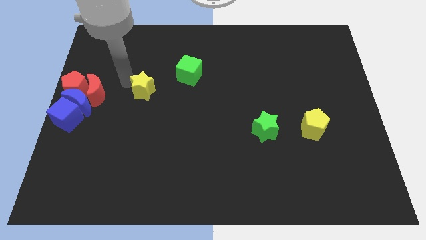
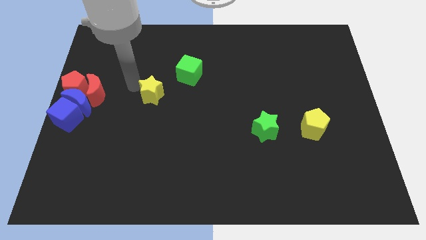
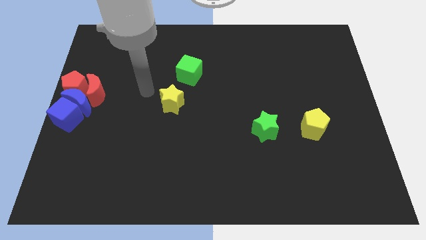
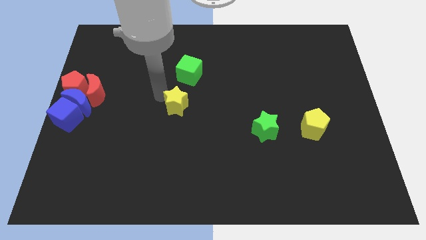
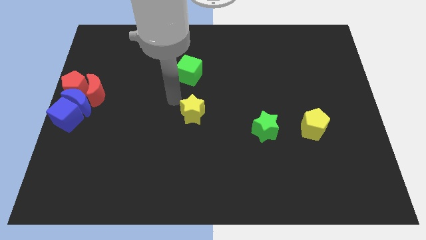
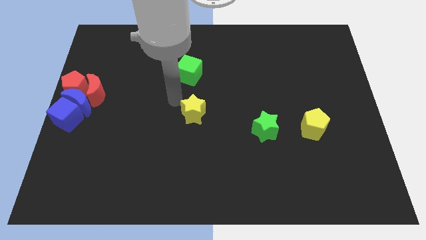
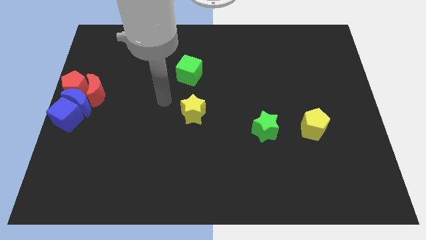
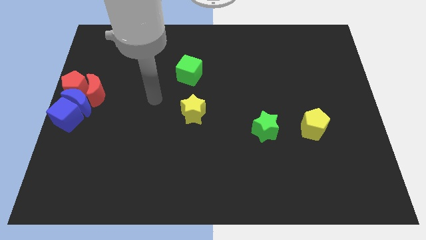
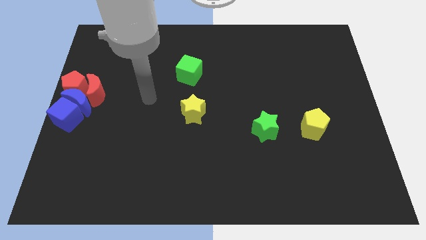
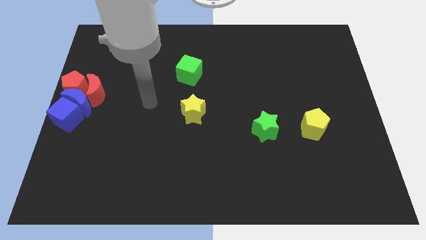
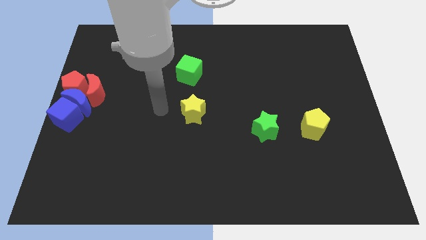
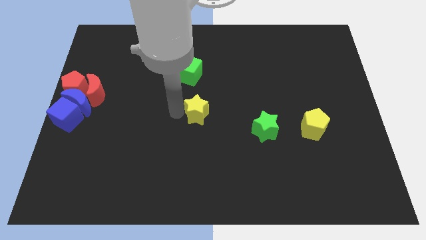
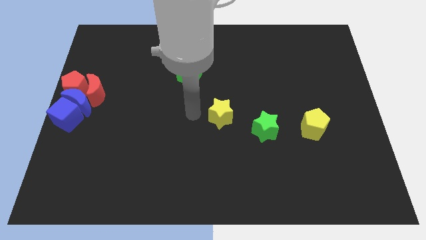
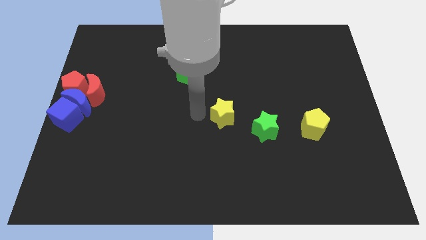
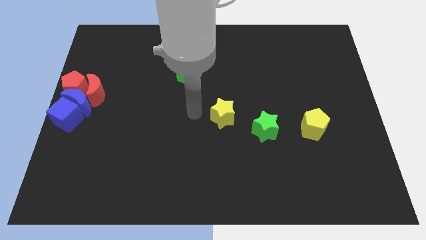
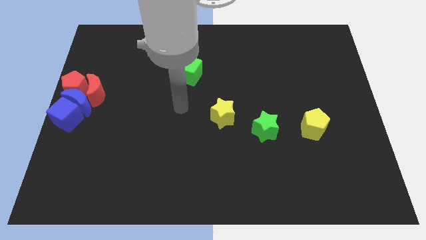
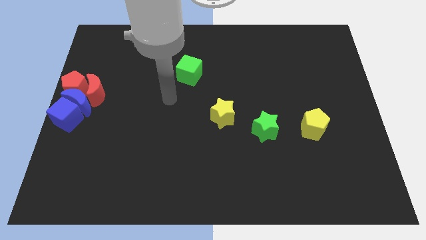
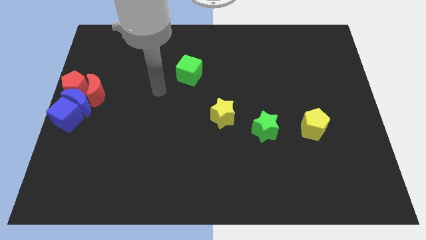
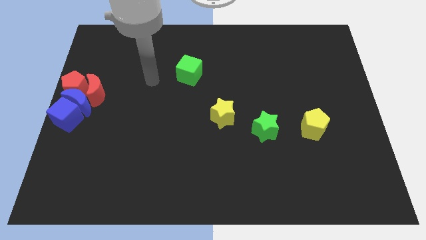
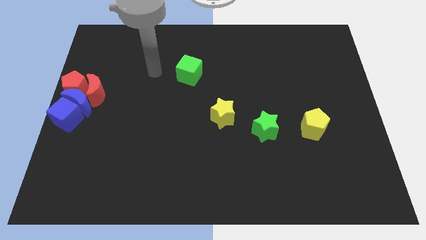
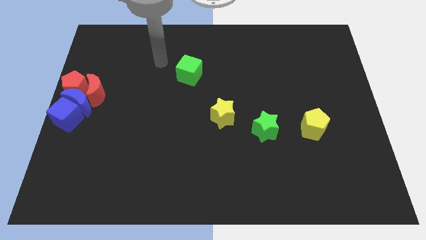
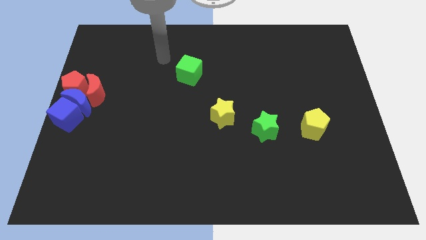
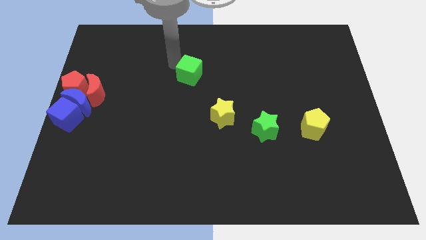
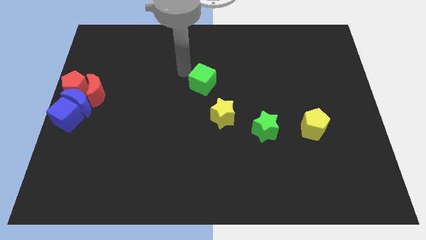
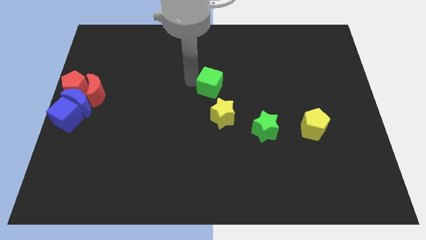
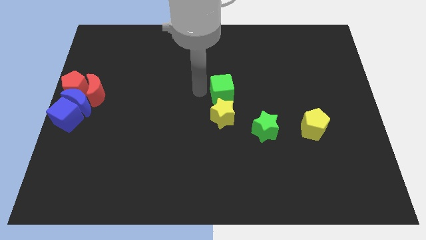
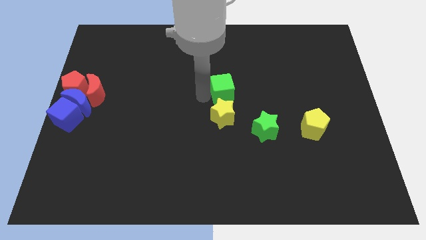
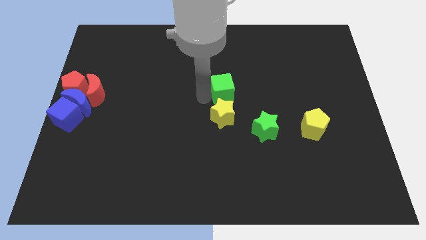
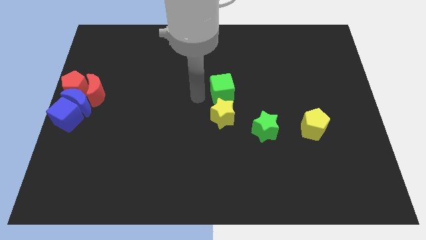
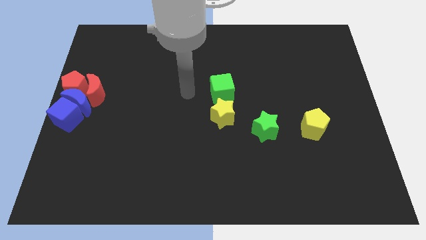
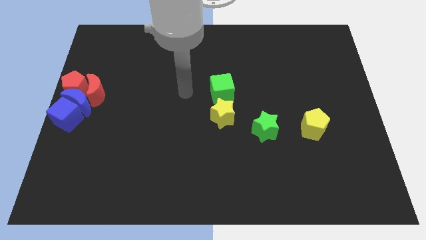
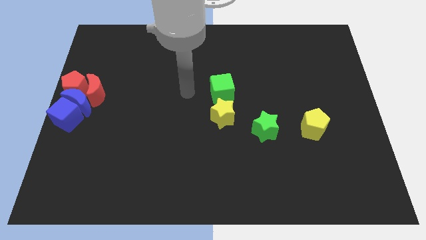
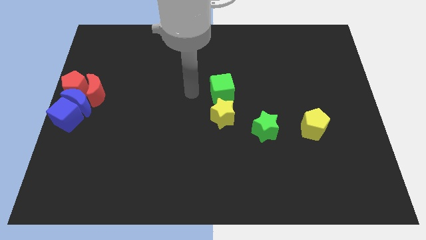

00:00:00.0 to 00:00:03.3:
move yellow star near green star

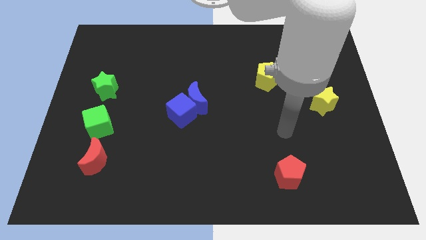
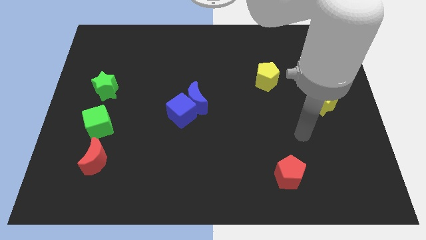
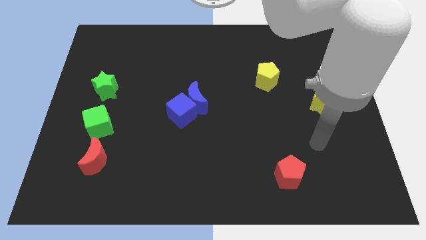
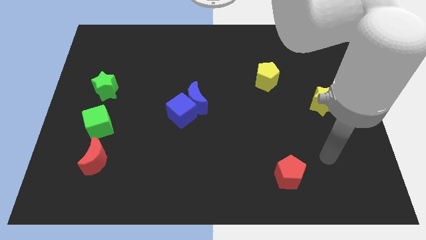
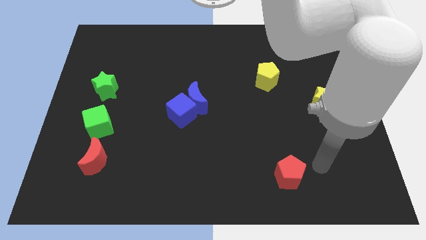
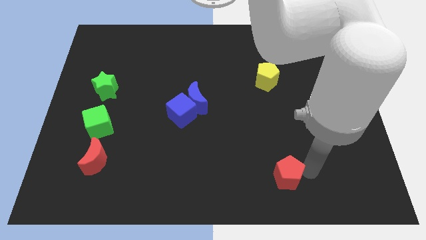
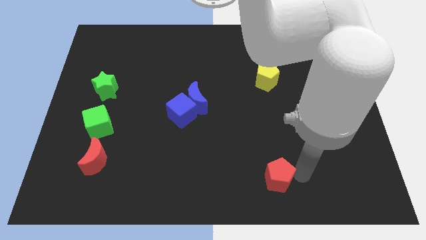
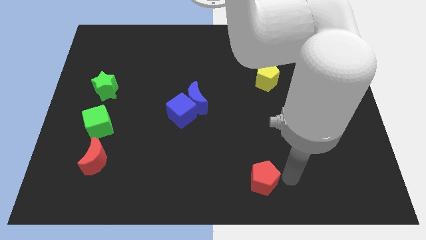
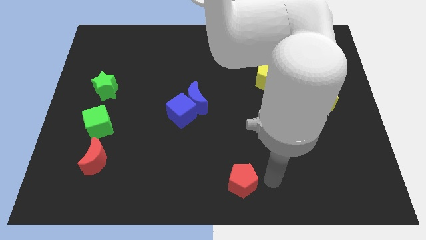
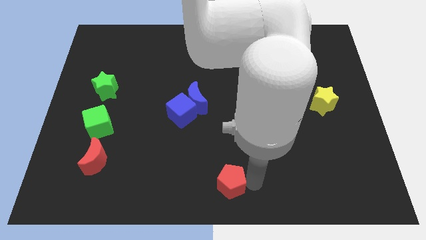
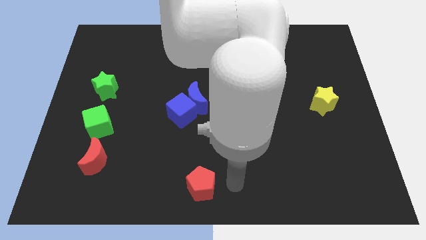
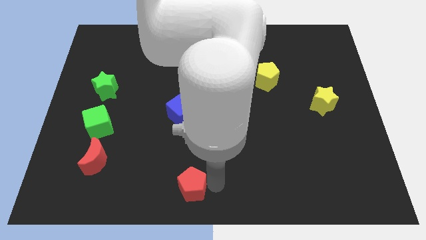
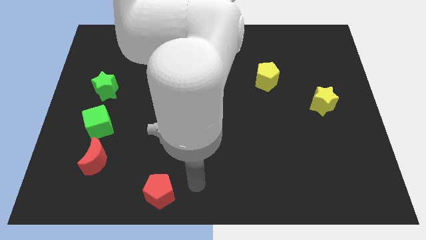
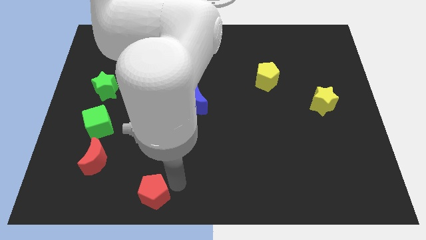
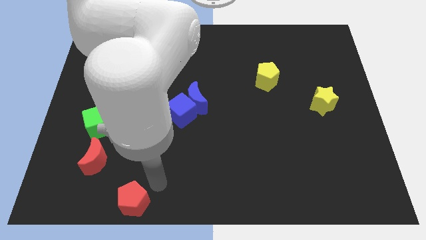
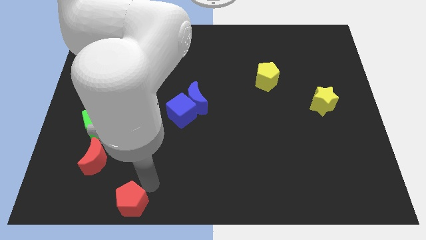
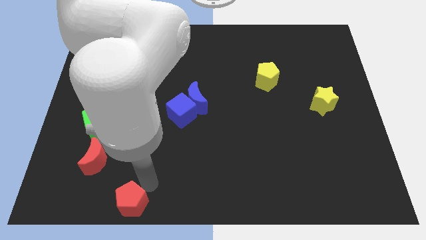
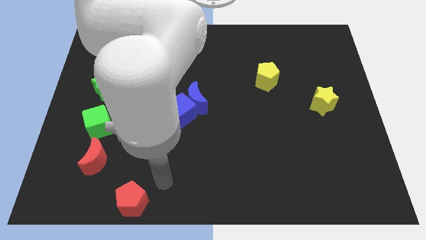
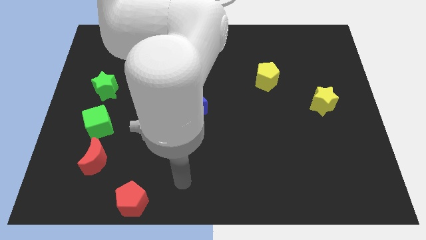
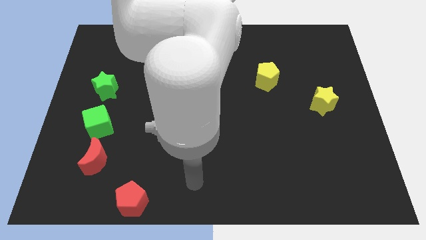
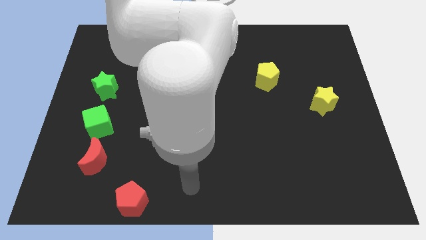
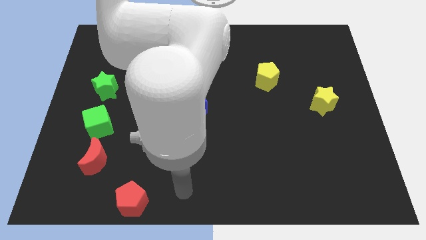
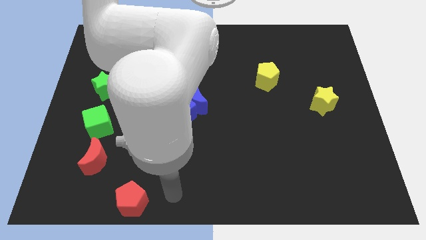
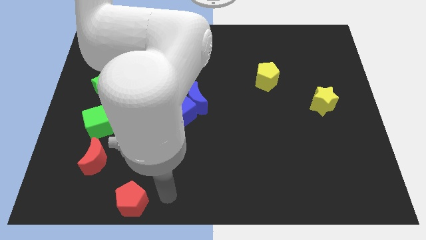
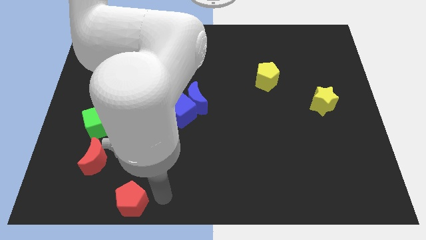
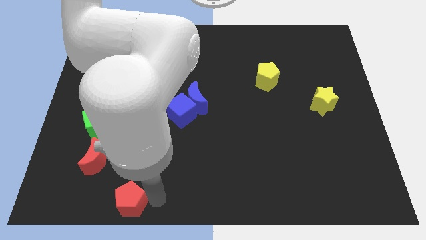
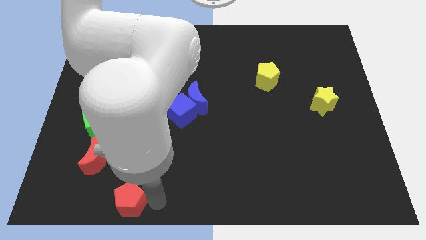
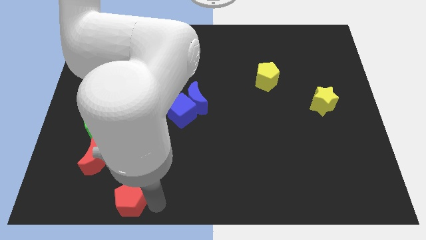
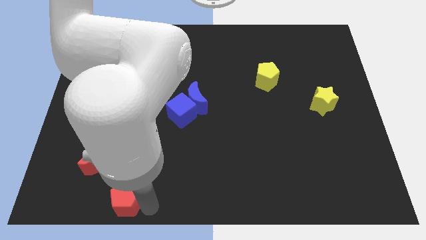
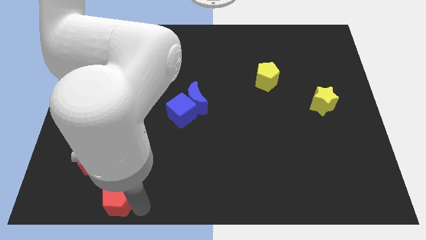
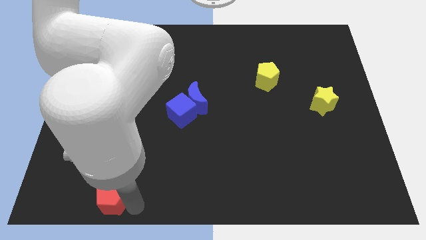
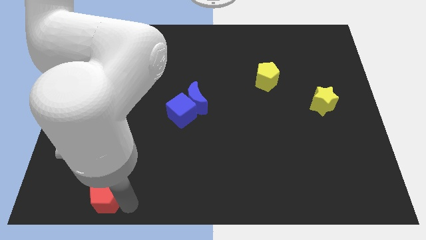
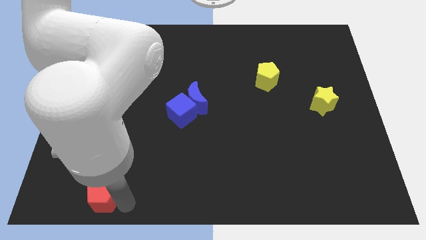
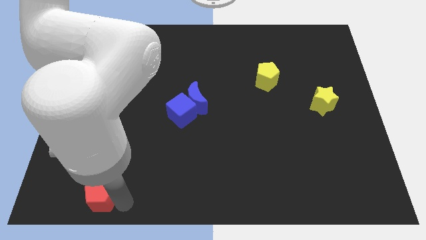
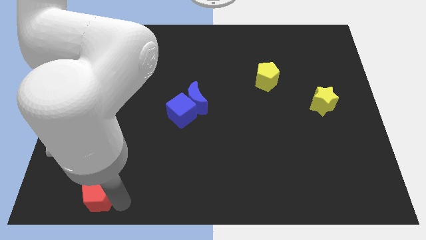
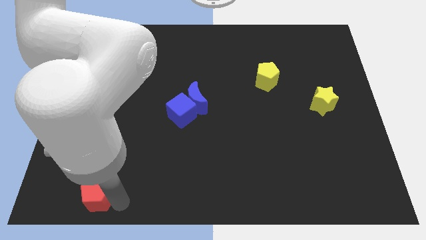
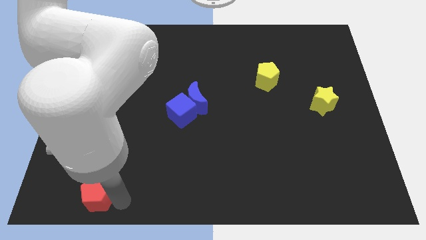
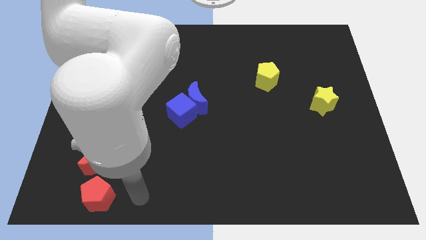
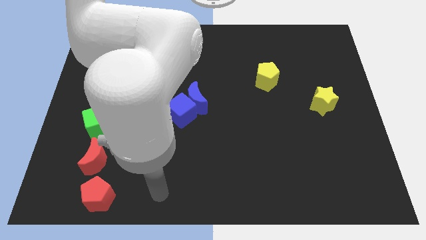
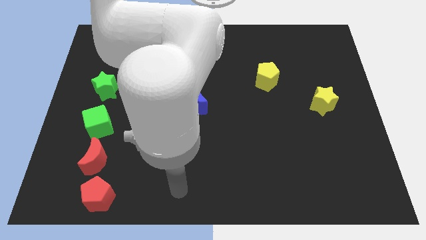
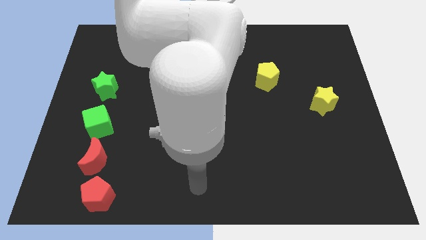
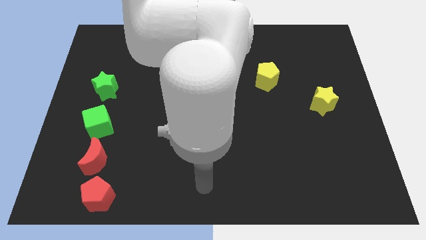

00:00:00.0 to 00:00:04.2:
place red pentagon below the red moon

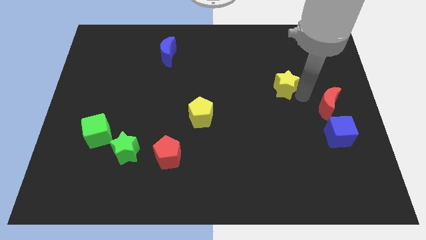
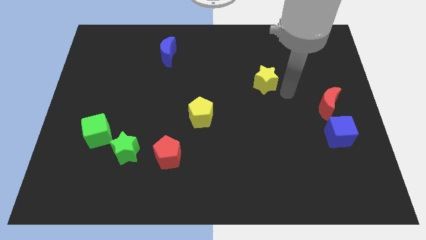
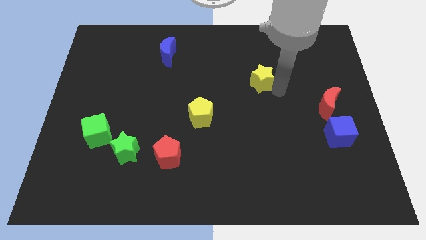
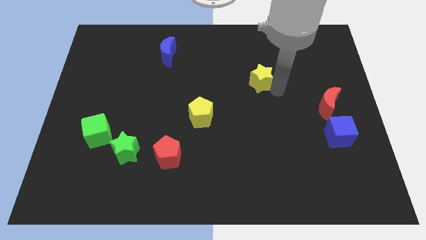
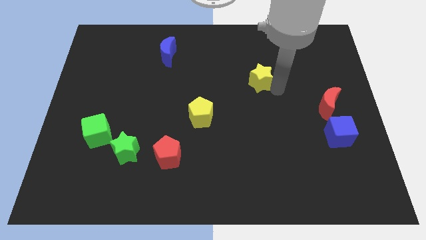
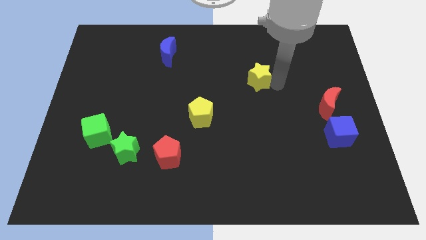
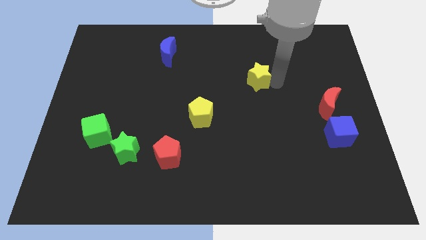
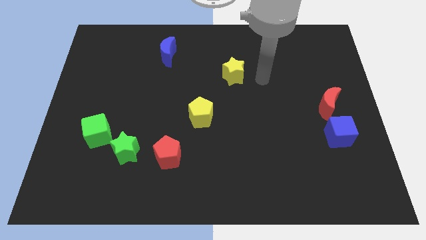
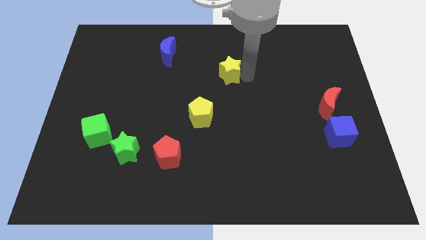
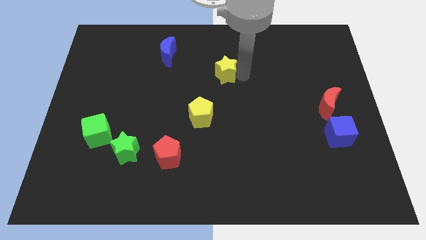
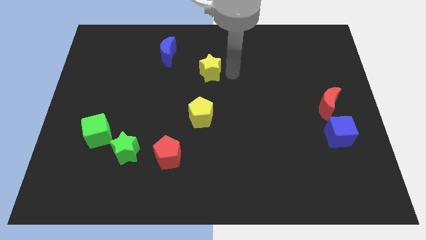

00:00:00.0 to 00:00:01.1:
move the yellow star vertically to the top of the yellow pentagon

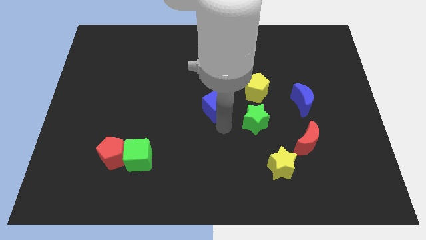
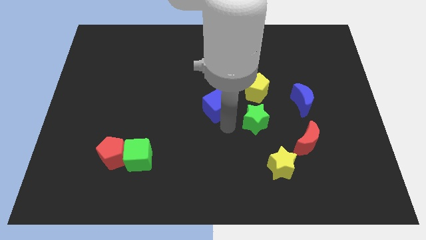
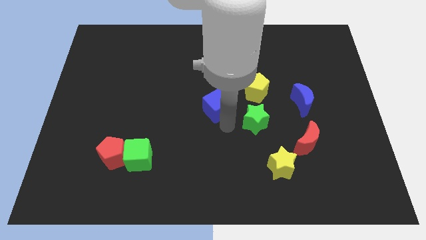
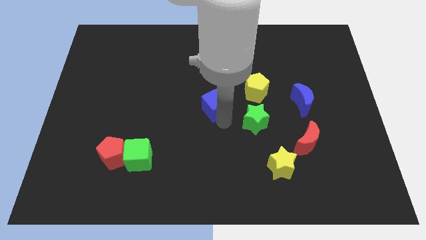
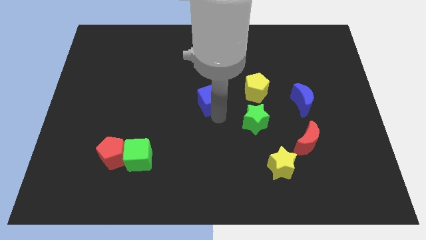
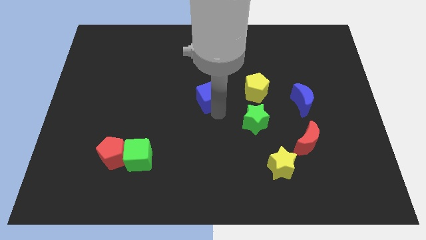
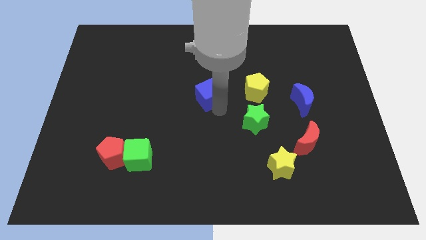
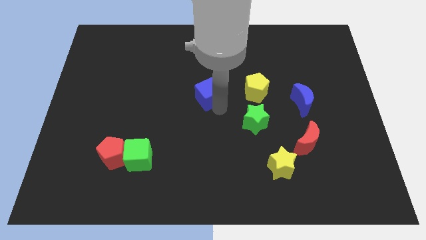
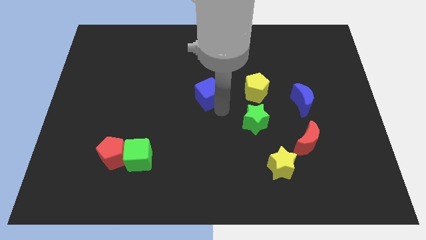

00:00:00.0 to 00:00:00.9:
move the blue cube to the top
